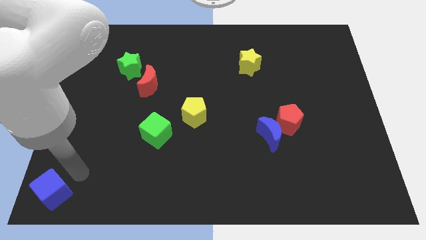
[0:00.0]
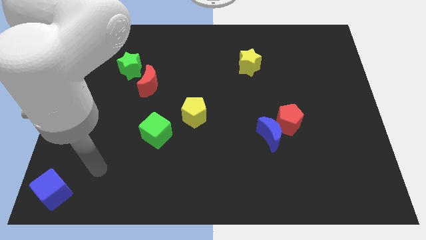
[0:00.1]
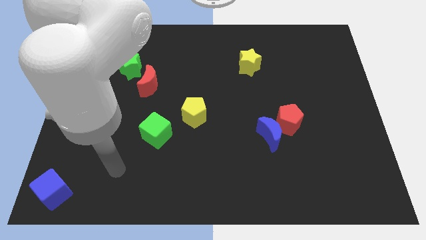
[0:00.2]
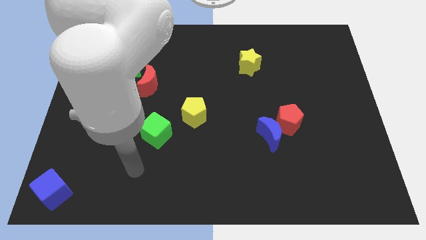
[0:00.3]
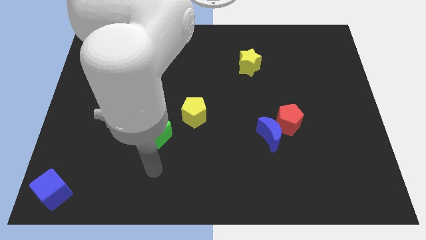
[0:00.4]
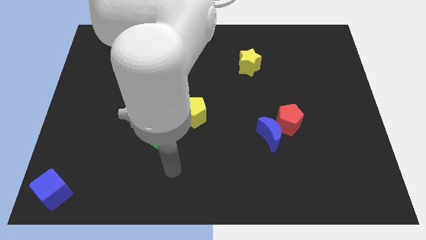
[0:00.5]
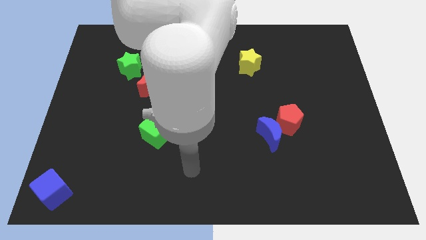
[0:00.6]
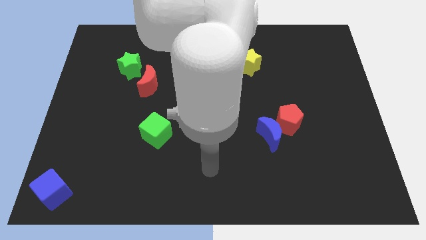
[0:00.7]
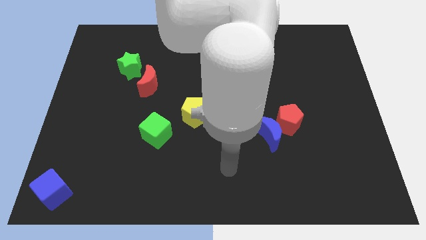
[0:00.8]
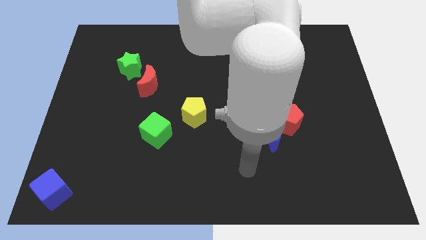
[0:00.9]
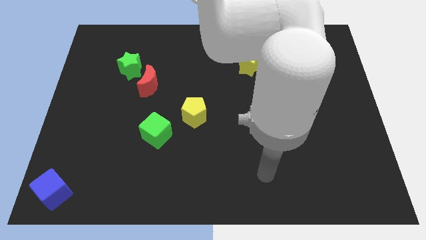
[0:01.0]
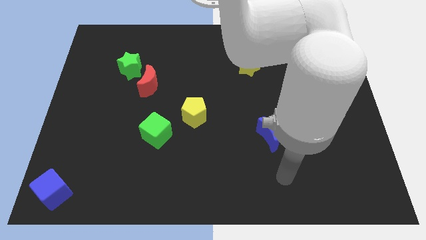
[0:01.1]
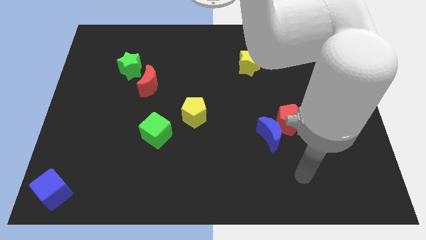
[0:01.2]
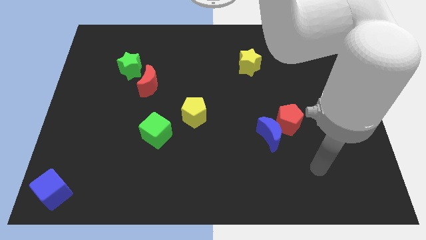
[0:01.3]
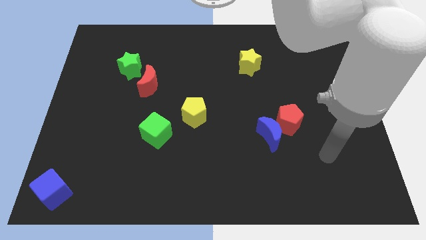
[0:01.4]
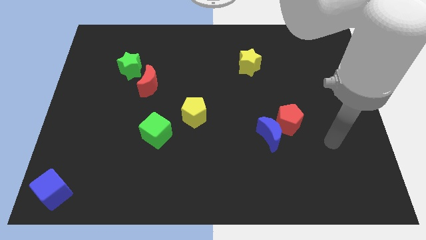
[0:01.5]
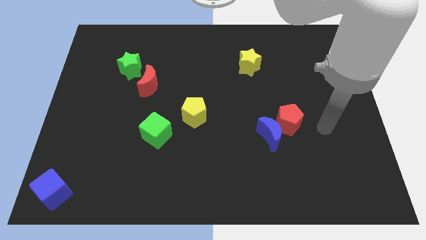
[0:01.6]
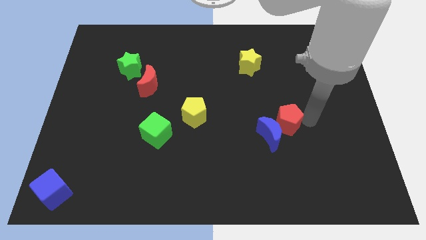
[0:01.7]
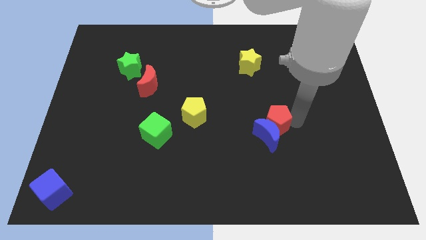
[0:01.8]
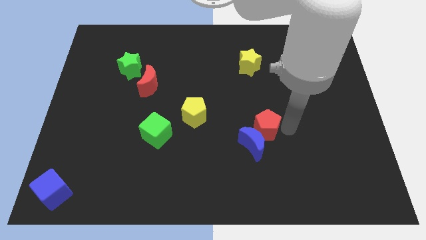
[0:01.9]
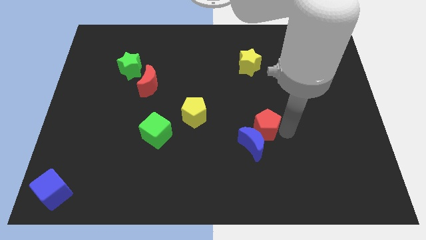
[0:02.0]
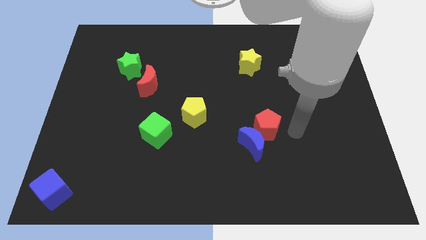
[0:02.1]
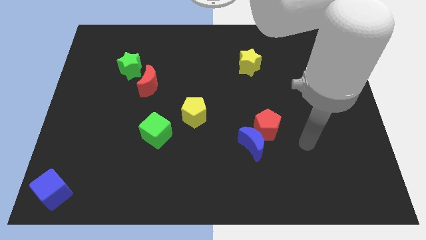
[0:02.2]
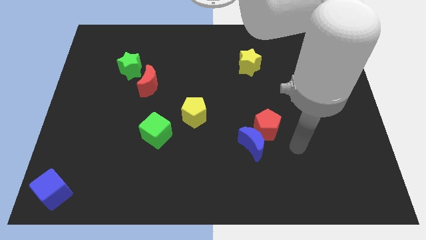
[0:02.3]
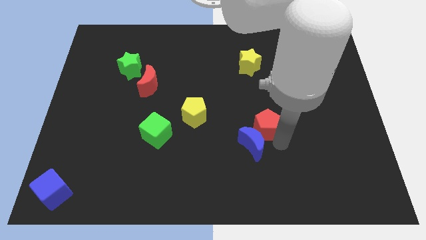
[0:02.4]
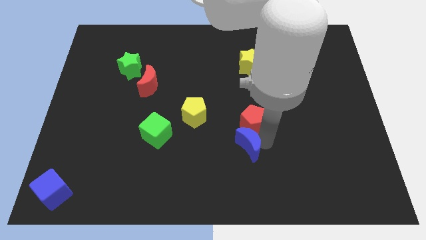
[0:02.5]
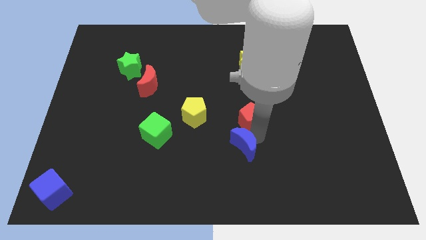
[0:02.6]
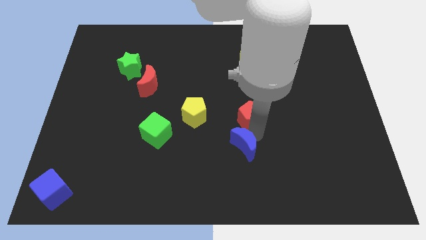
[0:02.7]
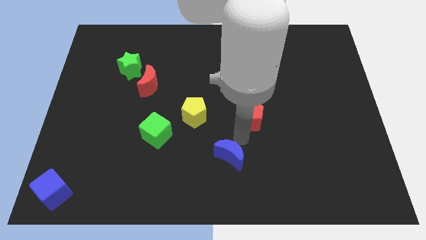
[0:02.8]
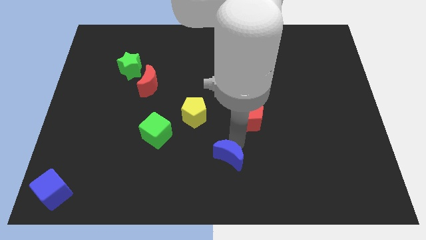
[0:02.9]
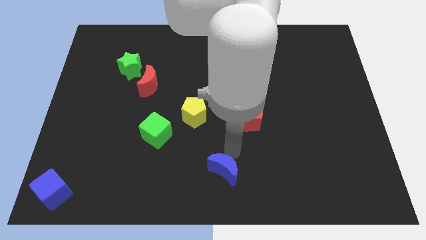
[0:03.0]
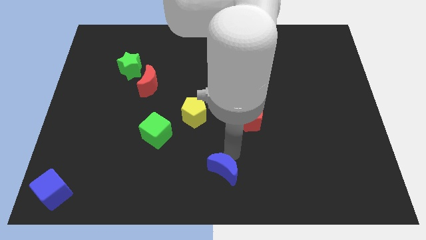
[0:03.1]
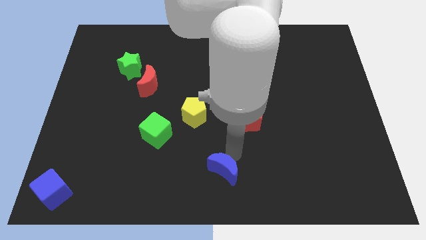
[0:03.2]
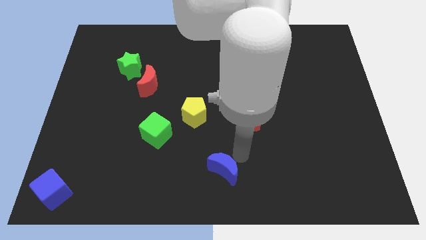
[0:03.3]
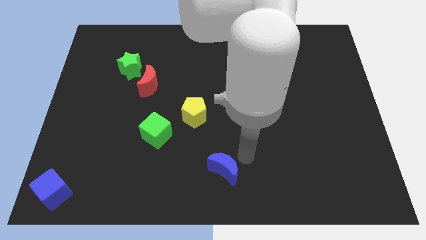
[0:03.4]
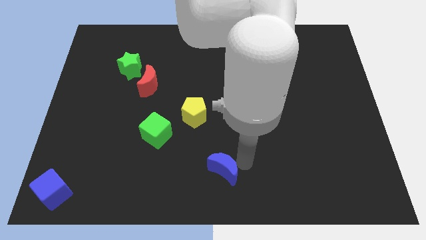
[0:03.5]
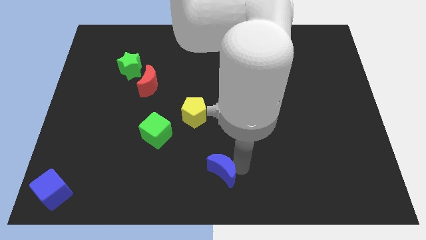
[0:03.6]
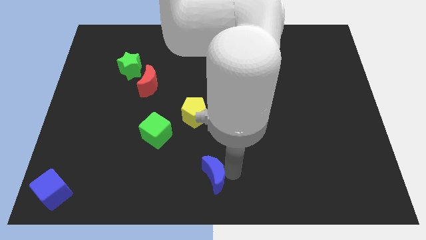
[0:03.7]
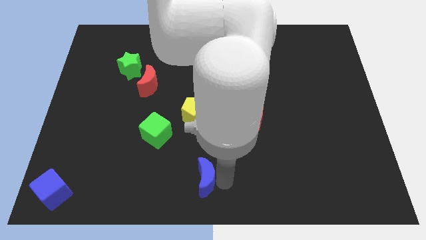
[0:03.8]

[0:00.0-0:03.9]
move the blue moon to the bottom center of the board

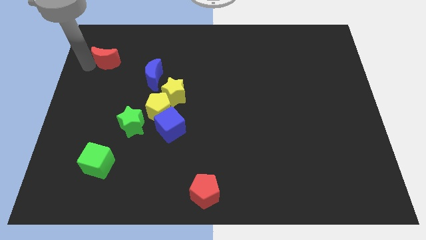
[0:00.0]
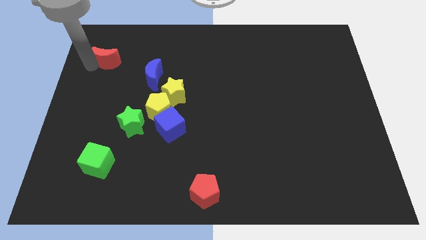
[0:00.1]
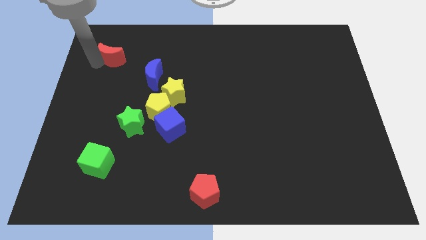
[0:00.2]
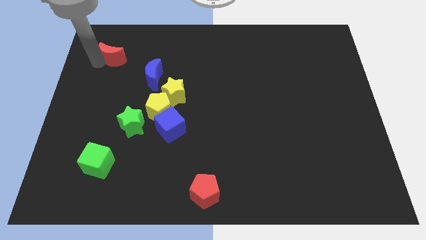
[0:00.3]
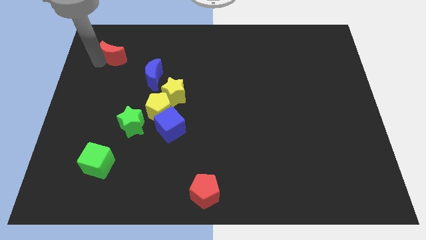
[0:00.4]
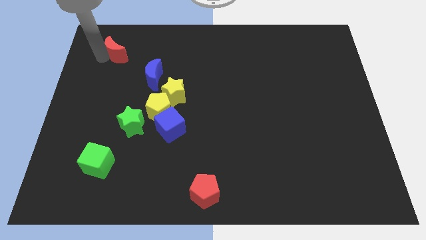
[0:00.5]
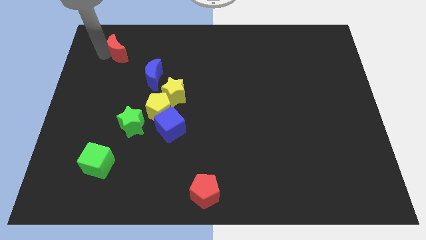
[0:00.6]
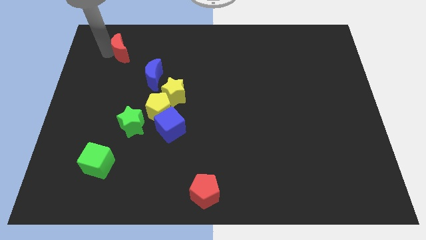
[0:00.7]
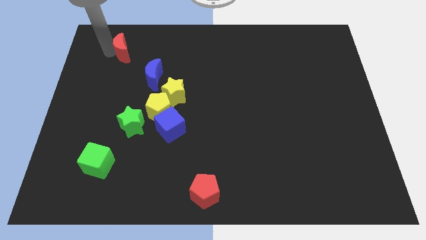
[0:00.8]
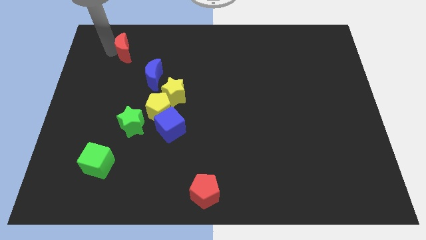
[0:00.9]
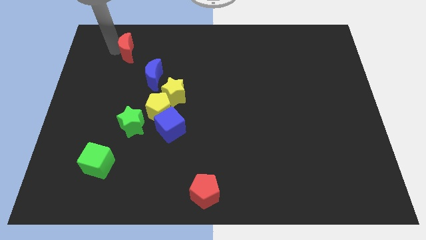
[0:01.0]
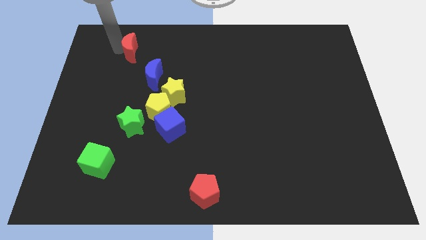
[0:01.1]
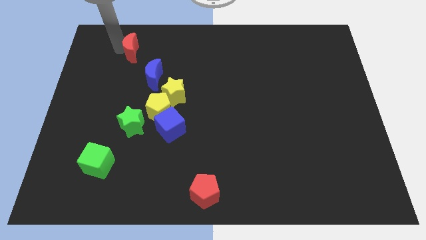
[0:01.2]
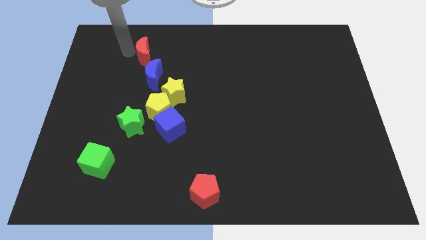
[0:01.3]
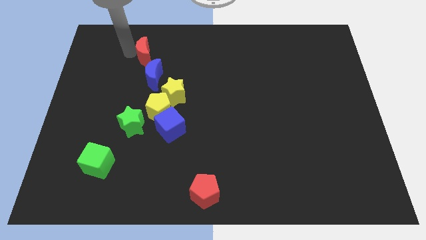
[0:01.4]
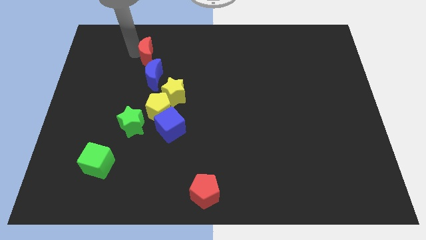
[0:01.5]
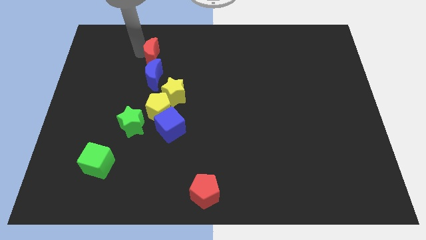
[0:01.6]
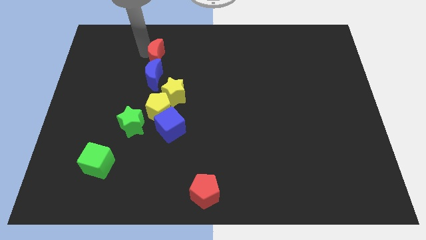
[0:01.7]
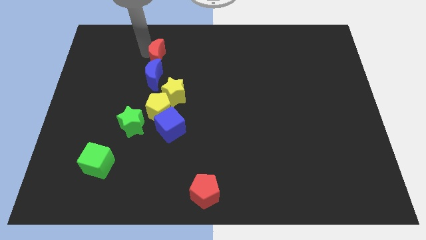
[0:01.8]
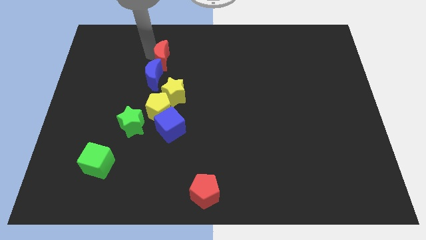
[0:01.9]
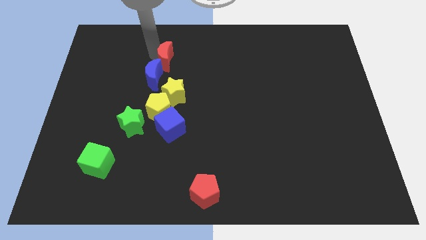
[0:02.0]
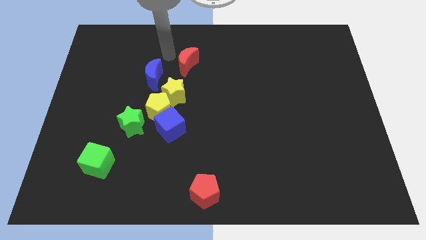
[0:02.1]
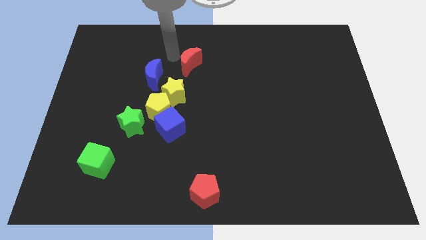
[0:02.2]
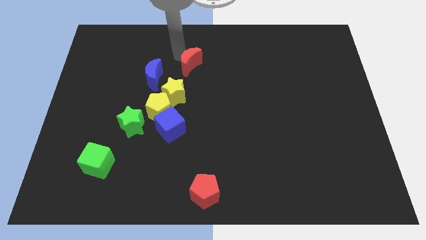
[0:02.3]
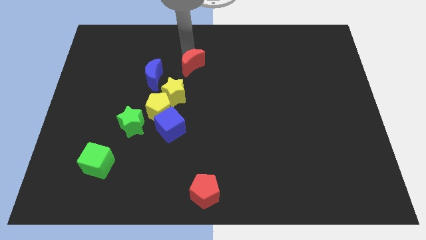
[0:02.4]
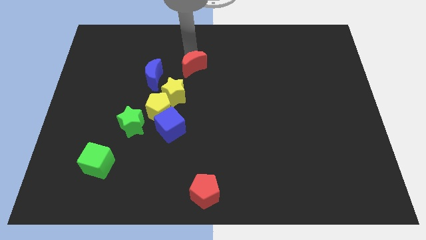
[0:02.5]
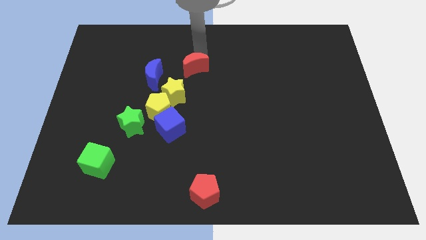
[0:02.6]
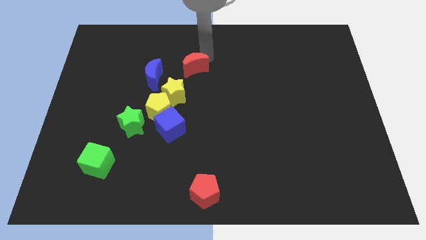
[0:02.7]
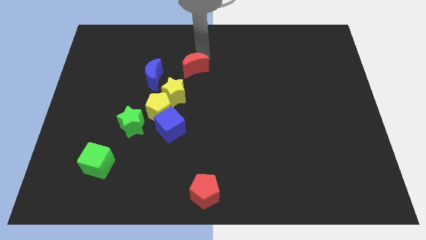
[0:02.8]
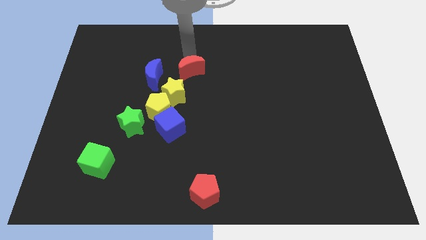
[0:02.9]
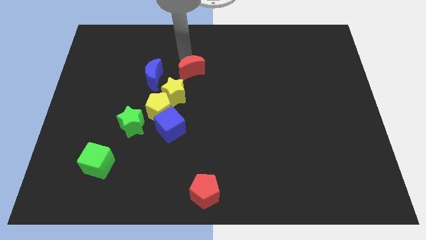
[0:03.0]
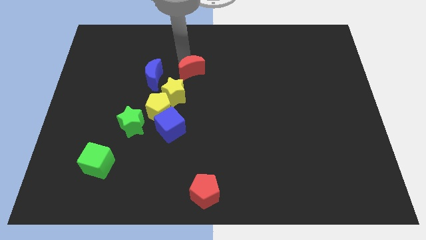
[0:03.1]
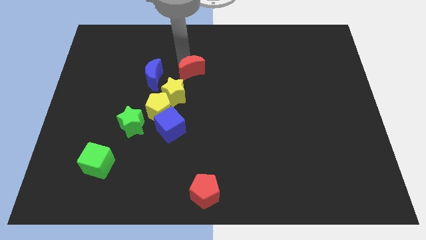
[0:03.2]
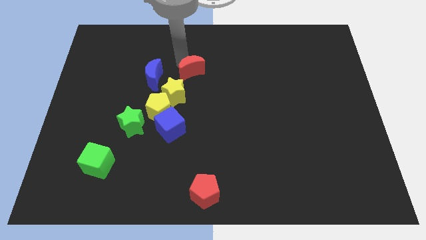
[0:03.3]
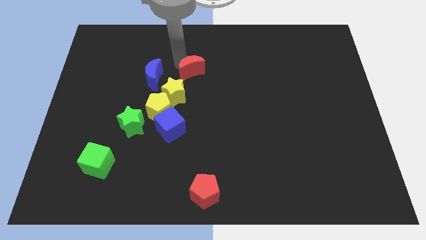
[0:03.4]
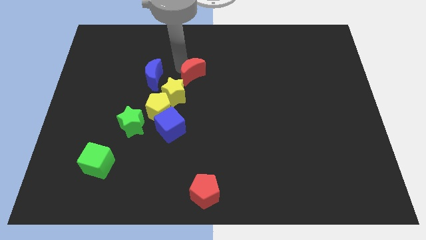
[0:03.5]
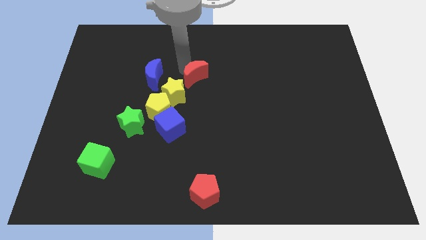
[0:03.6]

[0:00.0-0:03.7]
put the red crescent diagonally on the top right side of the yellow star

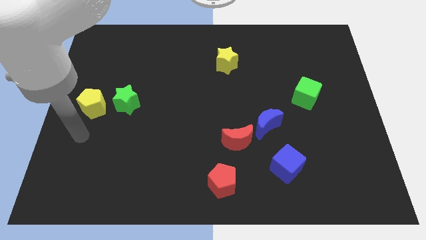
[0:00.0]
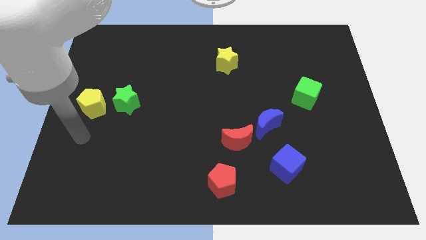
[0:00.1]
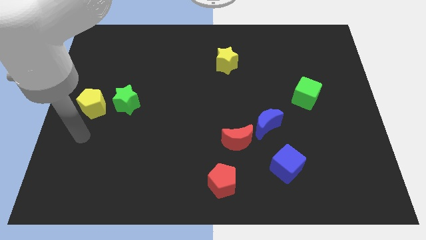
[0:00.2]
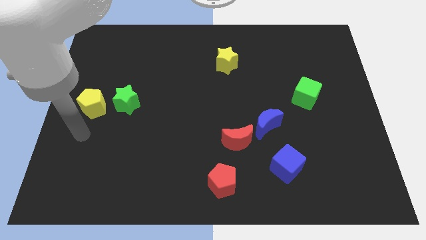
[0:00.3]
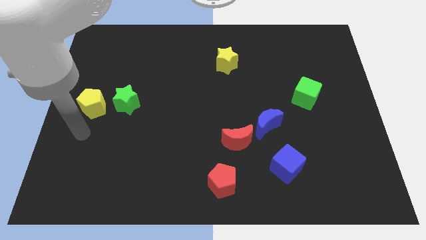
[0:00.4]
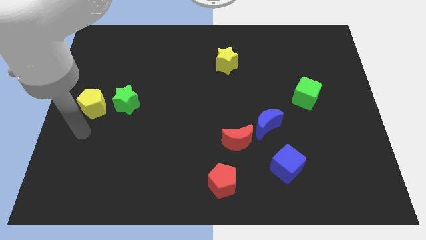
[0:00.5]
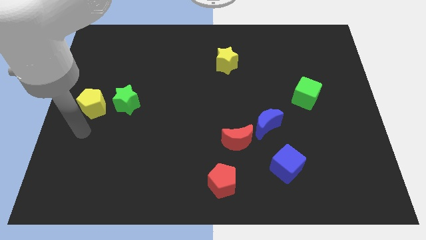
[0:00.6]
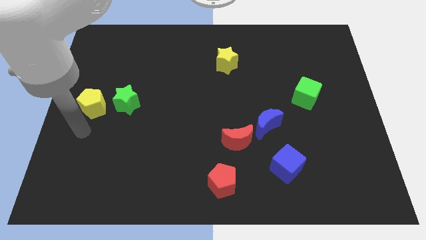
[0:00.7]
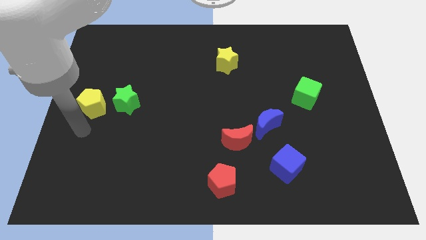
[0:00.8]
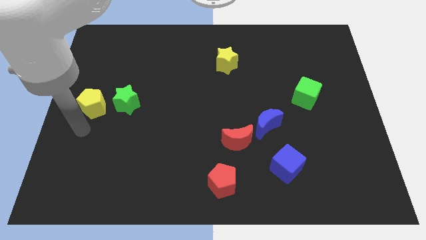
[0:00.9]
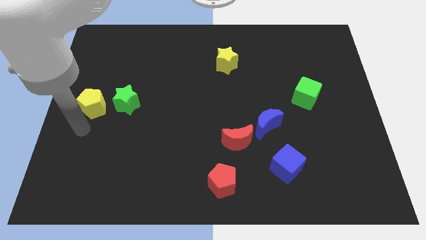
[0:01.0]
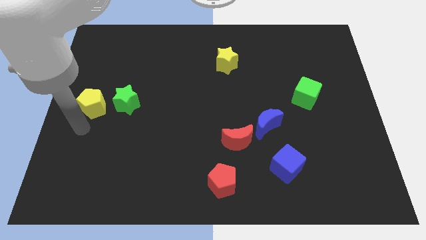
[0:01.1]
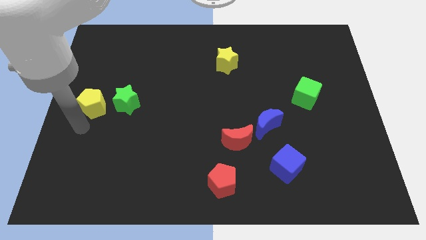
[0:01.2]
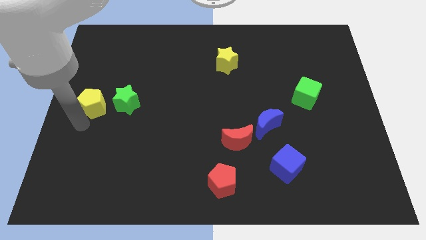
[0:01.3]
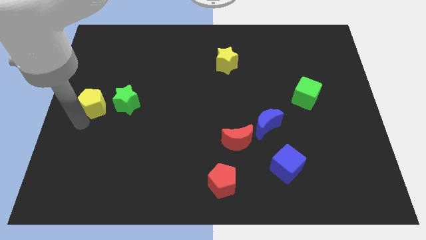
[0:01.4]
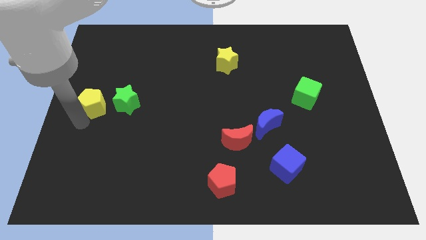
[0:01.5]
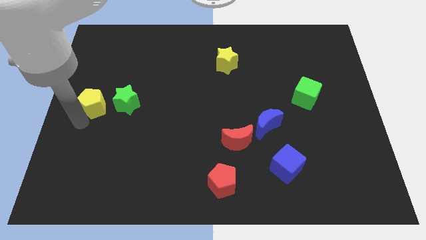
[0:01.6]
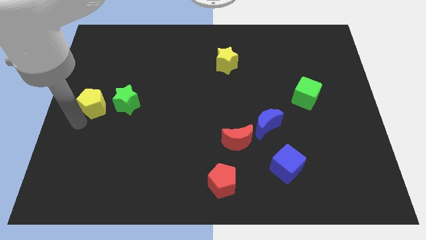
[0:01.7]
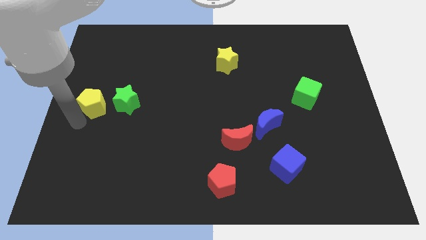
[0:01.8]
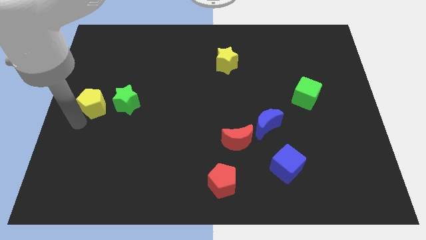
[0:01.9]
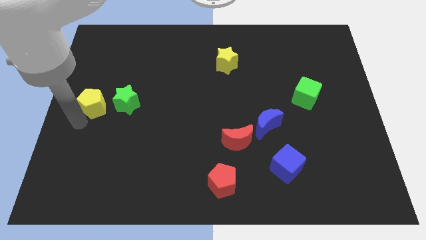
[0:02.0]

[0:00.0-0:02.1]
point your arm below the yellow pentagon
